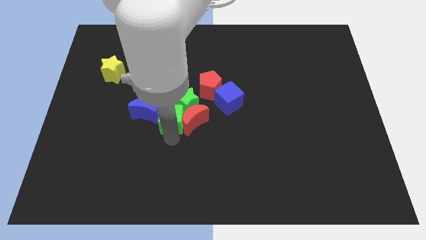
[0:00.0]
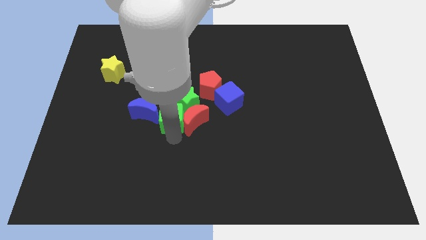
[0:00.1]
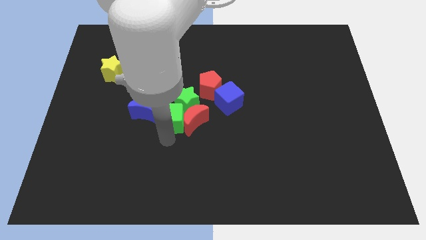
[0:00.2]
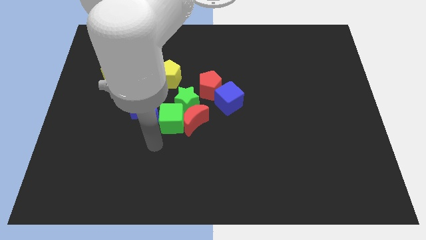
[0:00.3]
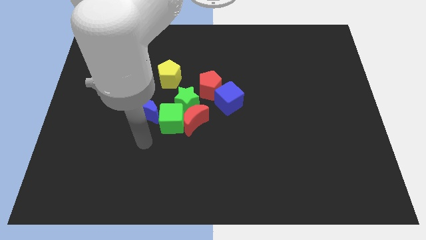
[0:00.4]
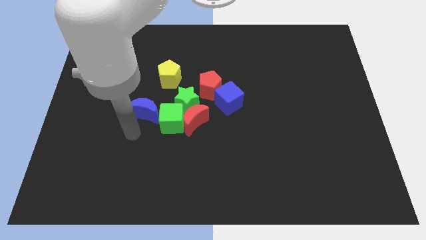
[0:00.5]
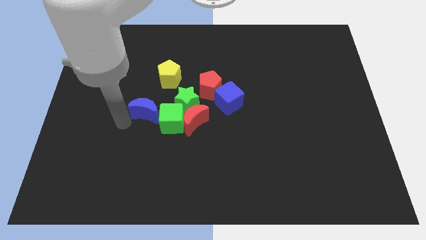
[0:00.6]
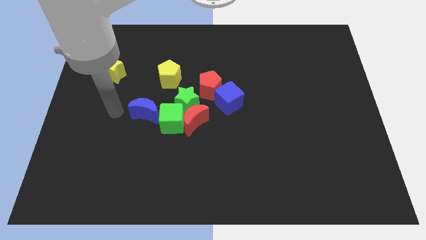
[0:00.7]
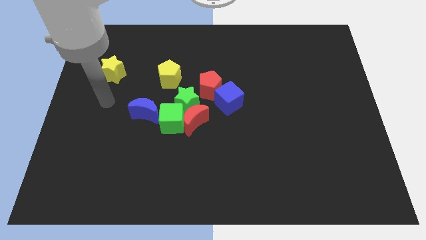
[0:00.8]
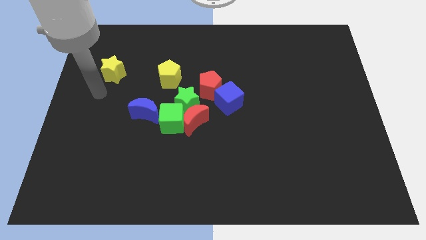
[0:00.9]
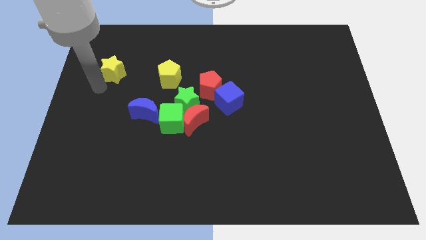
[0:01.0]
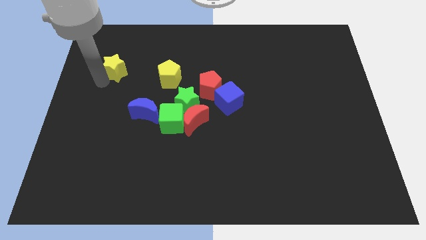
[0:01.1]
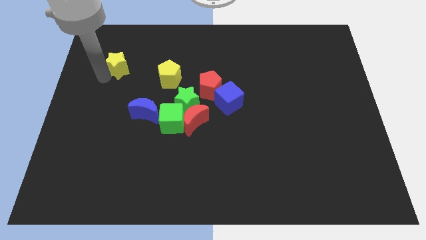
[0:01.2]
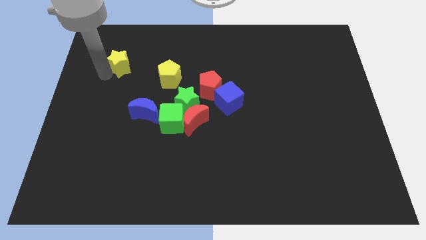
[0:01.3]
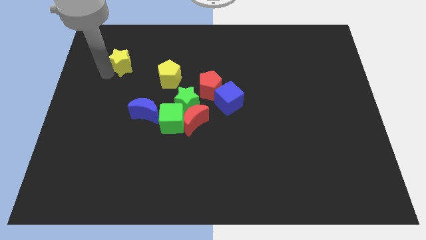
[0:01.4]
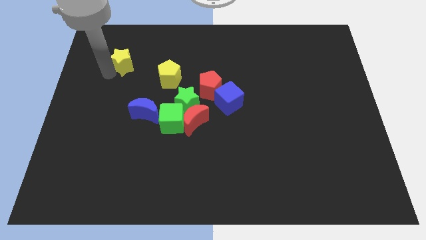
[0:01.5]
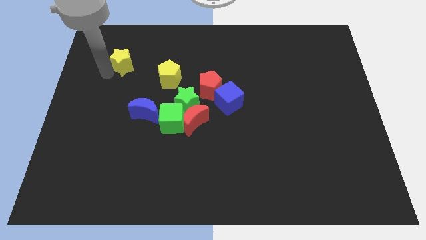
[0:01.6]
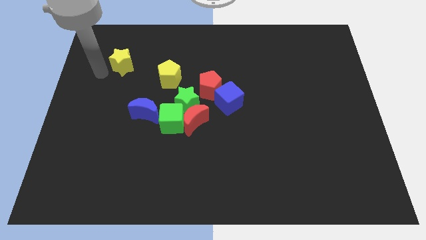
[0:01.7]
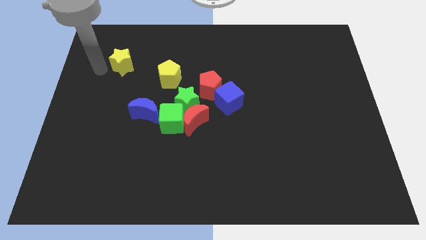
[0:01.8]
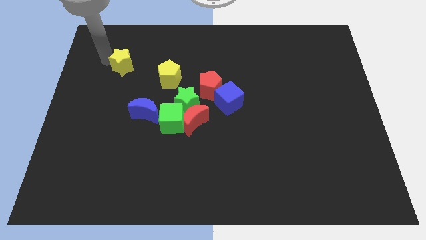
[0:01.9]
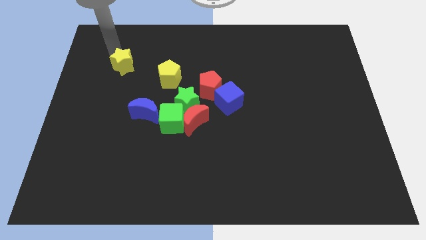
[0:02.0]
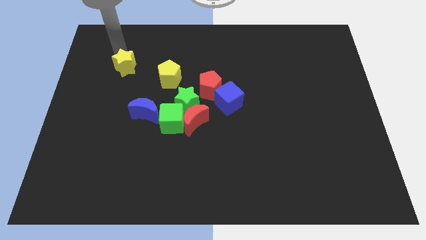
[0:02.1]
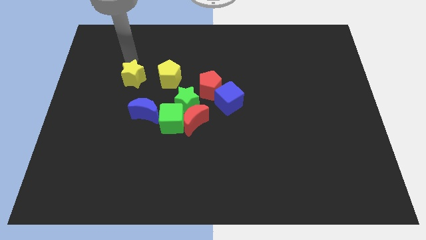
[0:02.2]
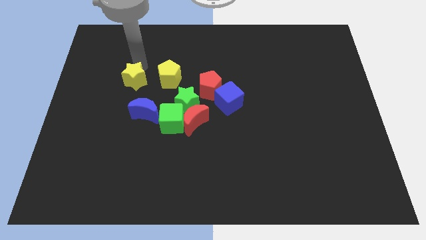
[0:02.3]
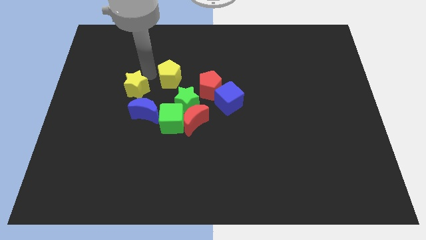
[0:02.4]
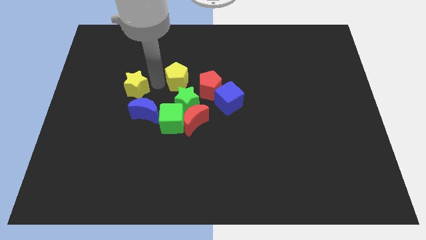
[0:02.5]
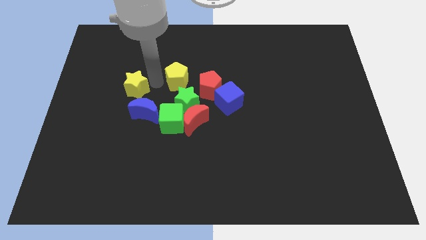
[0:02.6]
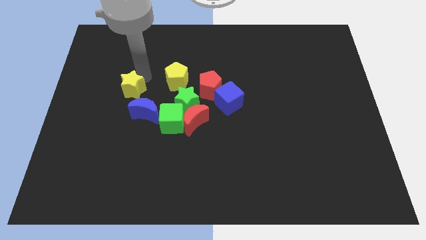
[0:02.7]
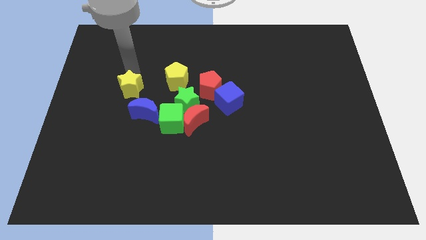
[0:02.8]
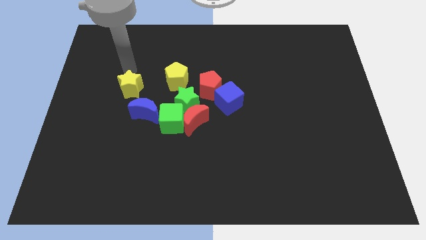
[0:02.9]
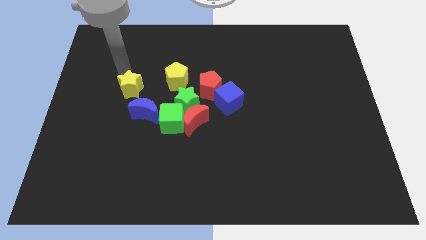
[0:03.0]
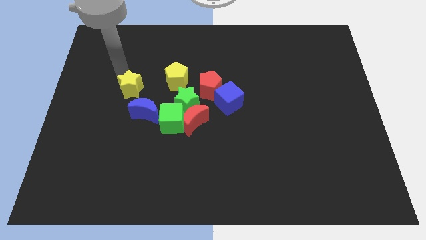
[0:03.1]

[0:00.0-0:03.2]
push the yellow star towards blue crescent

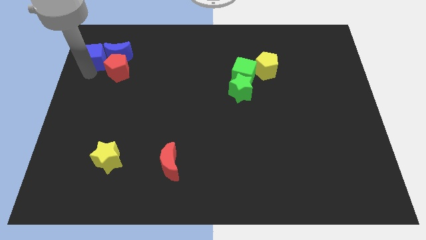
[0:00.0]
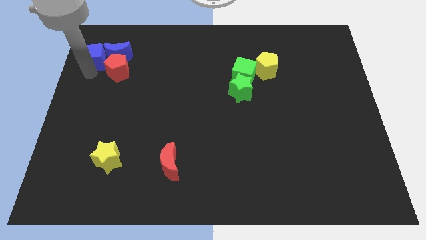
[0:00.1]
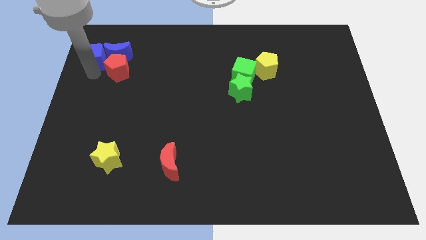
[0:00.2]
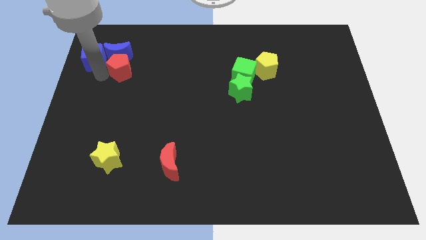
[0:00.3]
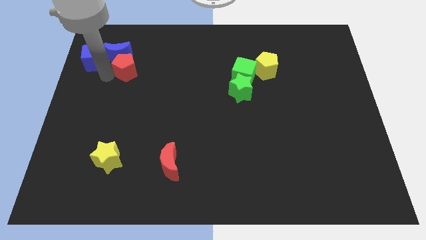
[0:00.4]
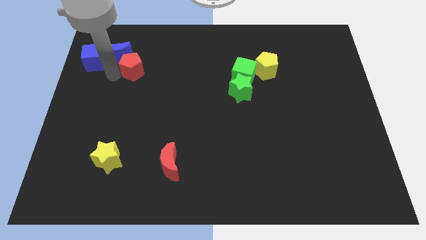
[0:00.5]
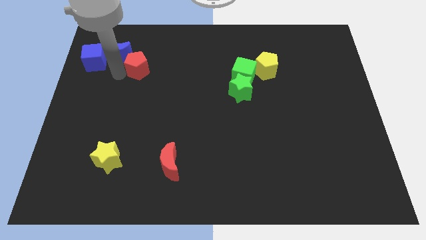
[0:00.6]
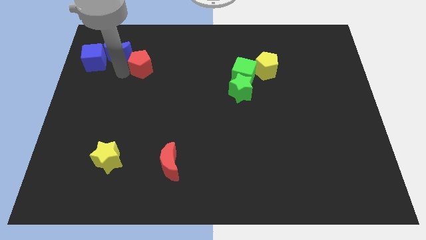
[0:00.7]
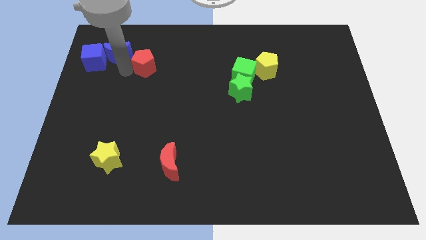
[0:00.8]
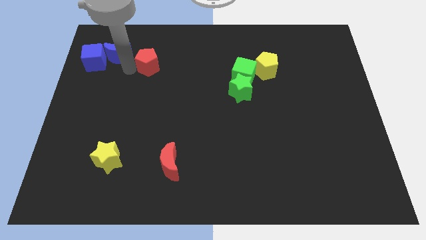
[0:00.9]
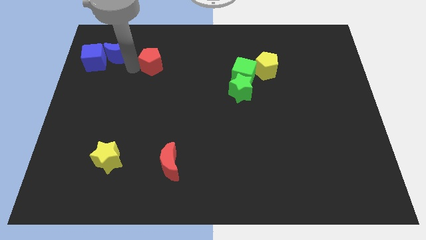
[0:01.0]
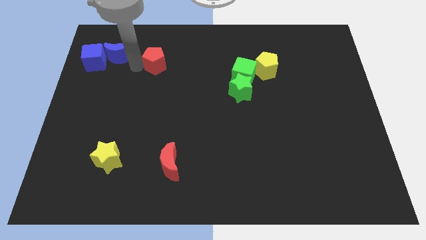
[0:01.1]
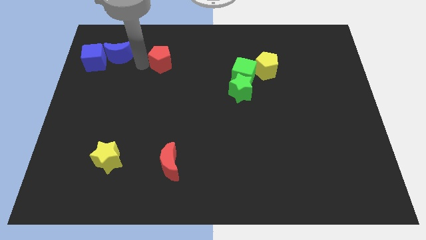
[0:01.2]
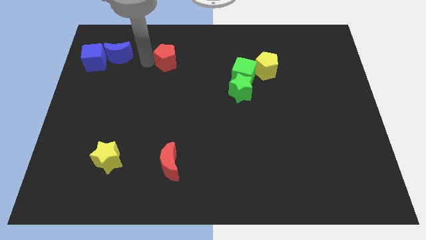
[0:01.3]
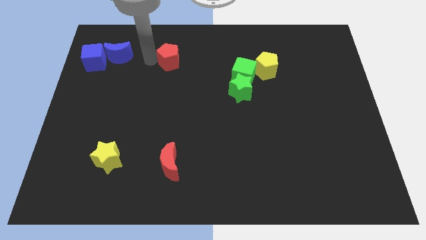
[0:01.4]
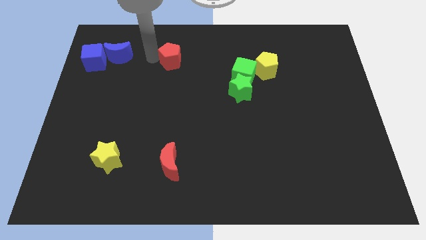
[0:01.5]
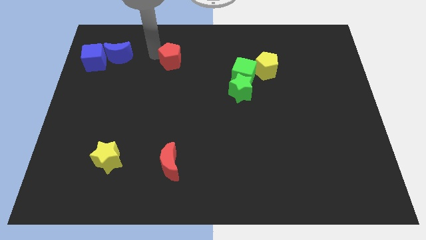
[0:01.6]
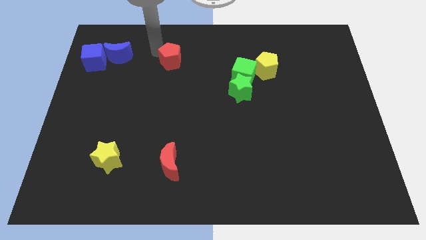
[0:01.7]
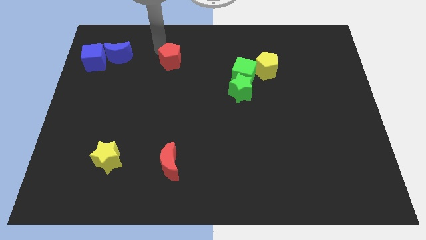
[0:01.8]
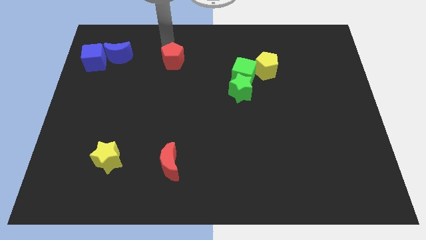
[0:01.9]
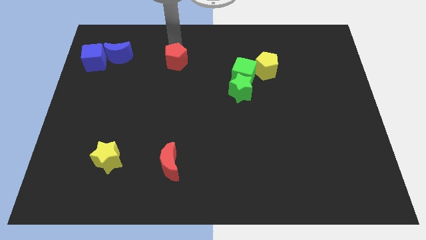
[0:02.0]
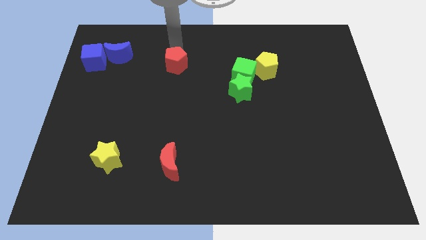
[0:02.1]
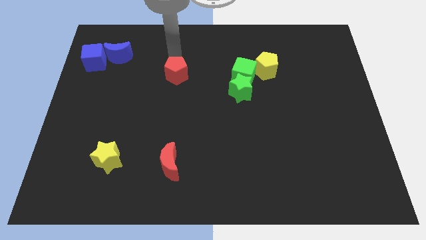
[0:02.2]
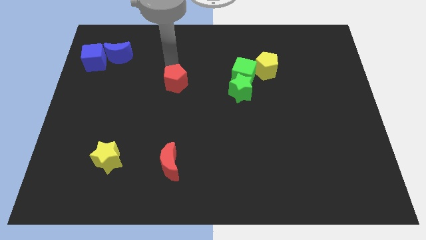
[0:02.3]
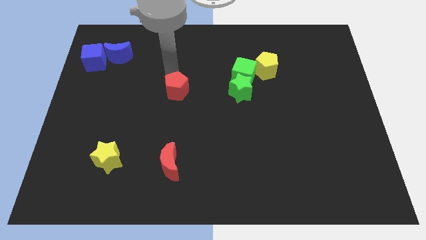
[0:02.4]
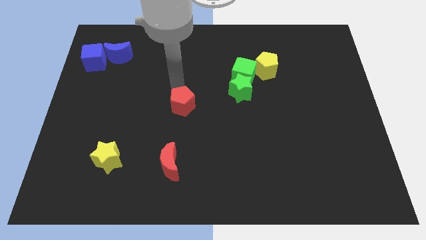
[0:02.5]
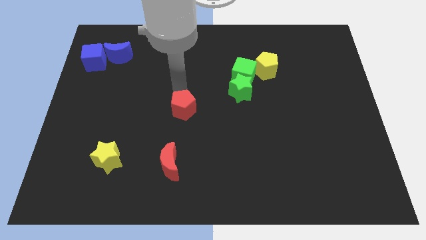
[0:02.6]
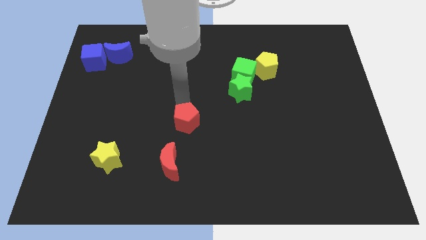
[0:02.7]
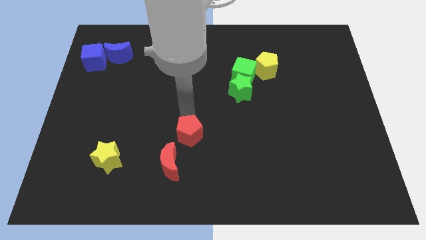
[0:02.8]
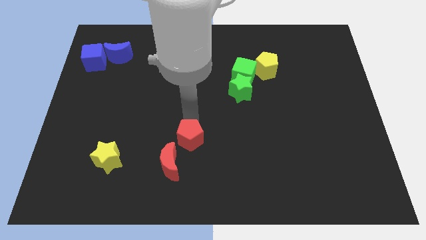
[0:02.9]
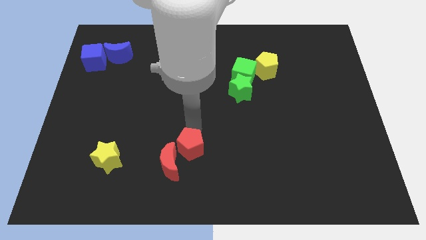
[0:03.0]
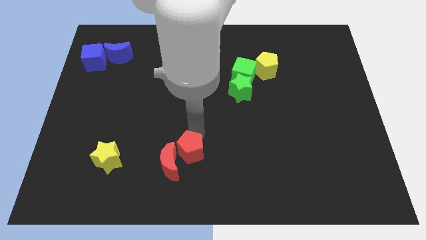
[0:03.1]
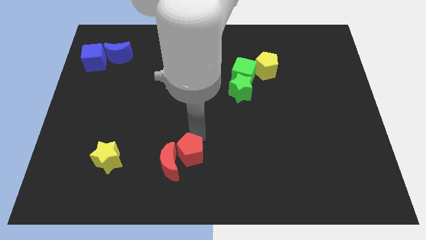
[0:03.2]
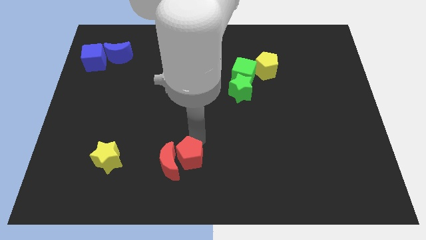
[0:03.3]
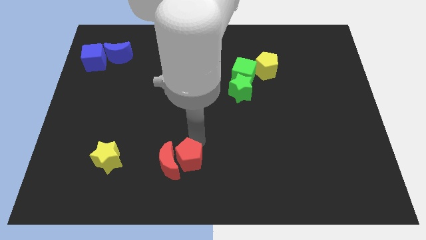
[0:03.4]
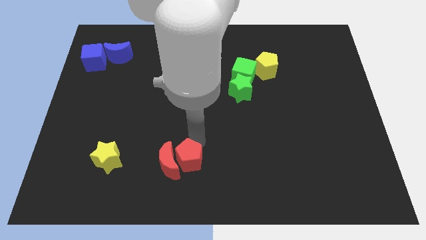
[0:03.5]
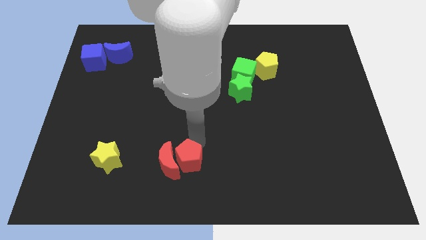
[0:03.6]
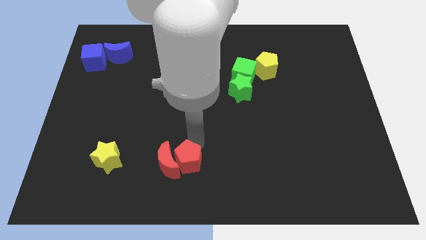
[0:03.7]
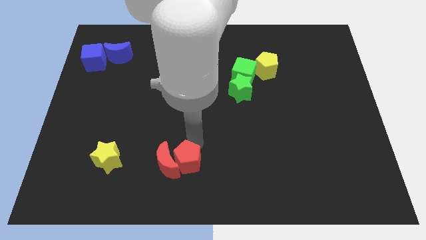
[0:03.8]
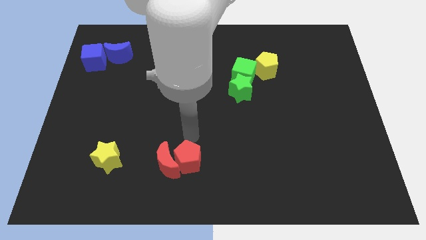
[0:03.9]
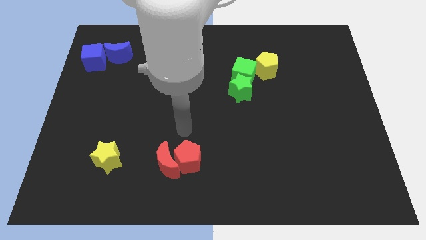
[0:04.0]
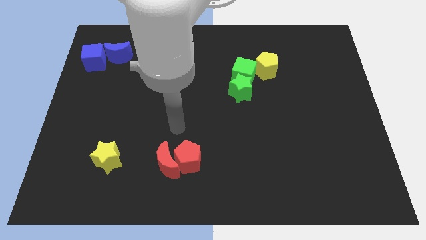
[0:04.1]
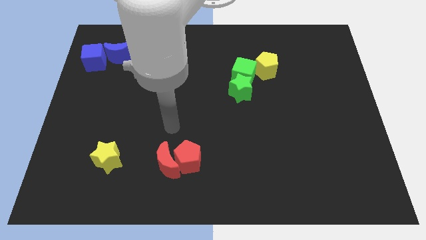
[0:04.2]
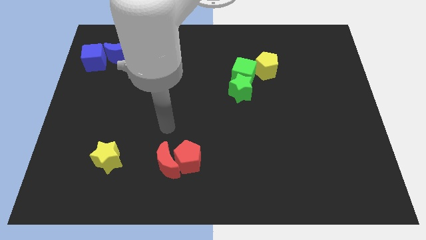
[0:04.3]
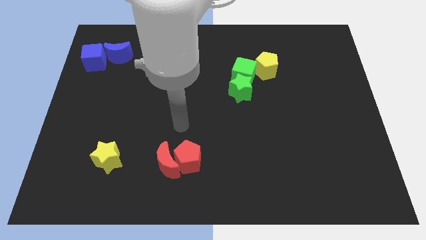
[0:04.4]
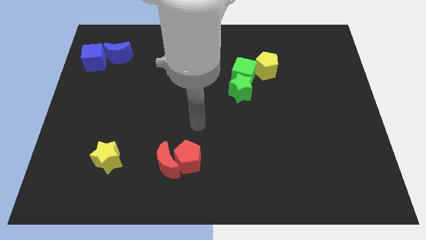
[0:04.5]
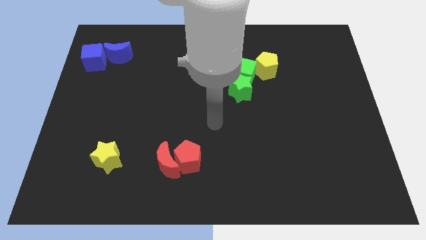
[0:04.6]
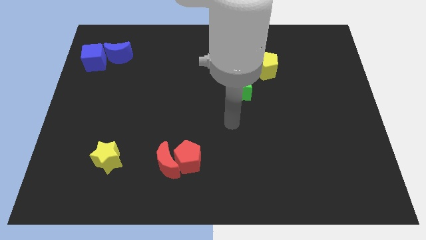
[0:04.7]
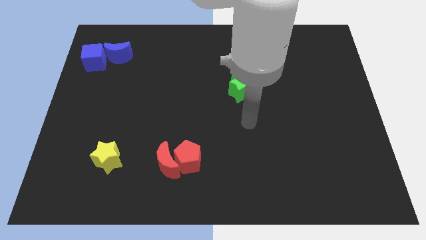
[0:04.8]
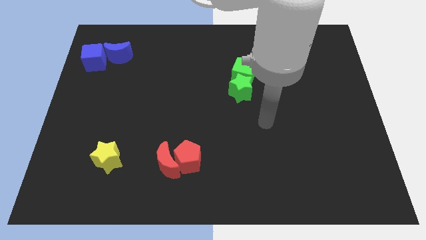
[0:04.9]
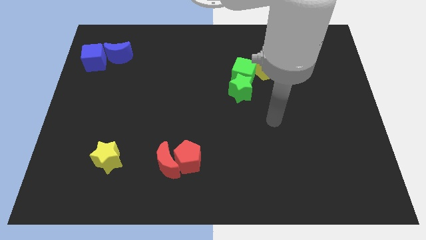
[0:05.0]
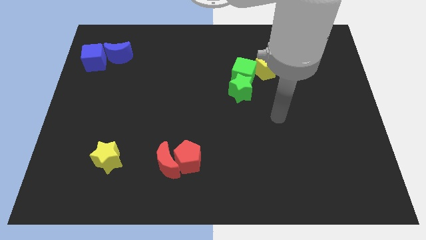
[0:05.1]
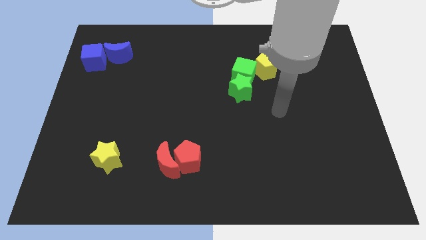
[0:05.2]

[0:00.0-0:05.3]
slide the red pentagon to the right side of the red crescent

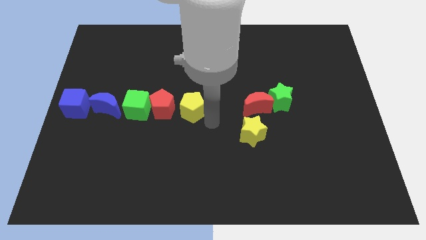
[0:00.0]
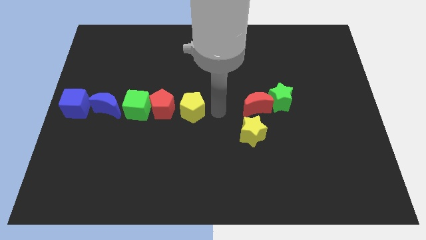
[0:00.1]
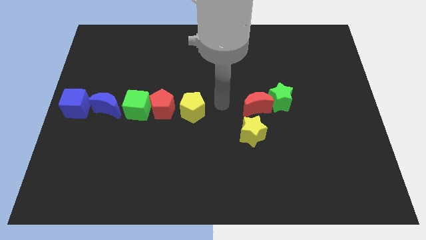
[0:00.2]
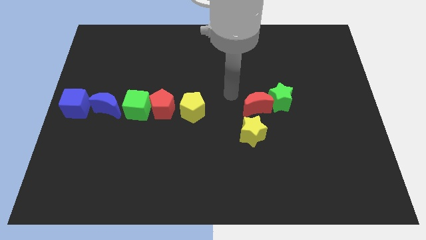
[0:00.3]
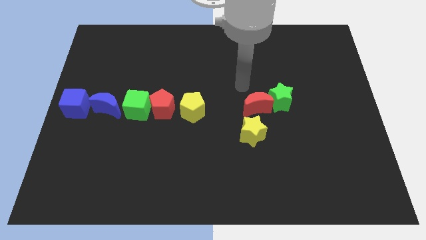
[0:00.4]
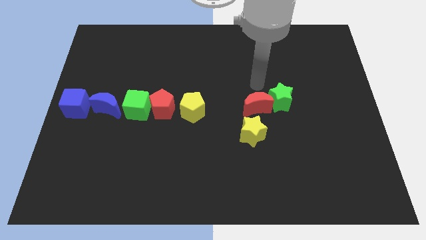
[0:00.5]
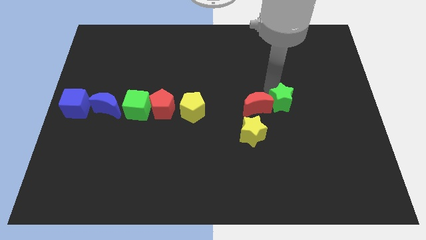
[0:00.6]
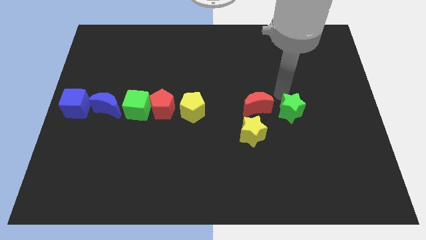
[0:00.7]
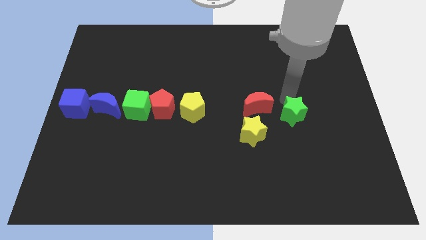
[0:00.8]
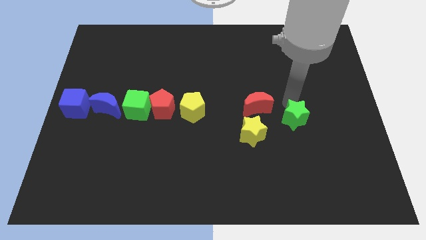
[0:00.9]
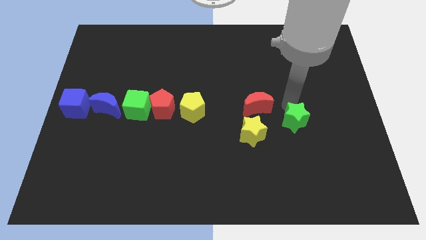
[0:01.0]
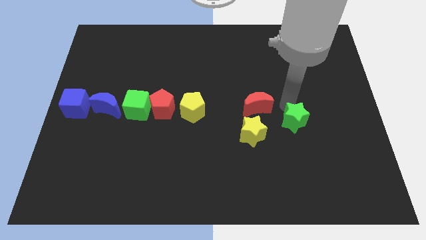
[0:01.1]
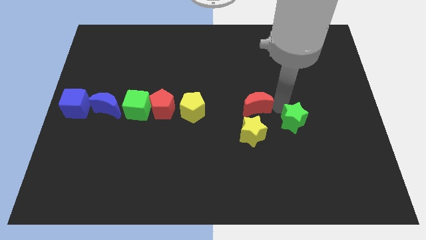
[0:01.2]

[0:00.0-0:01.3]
separate the green star from red crescent
